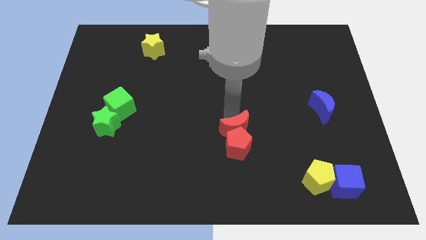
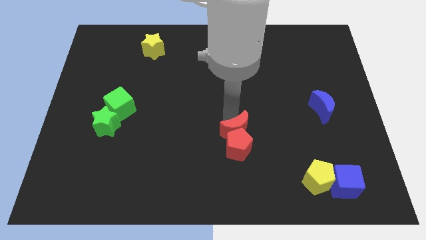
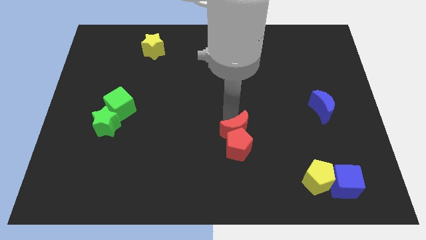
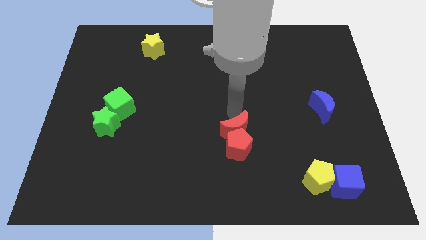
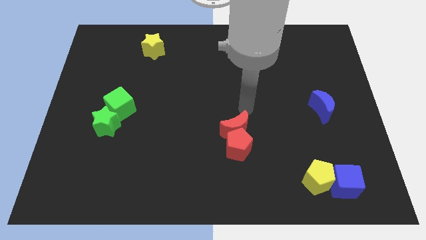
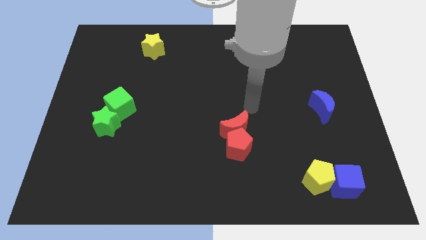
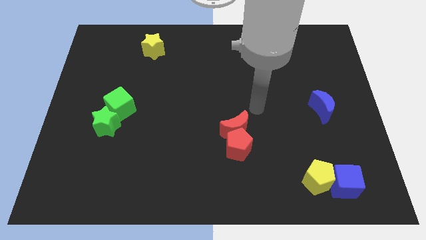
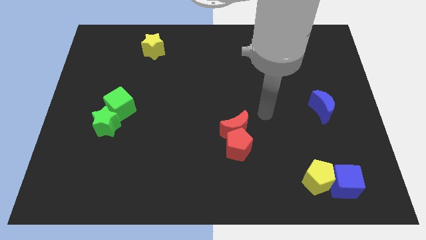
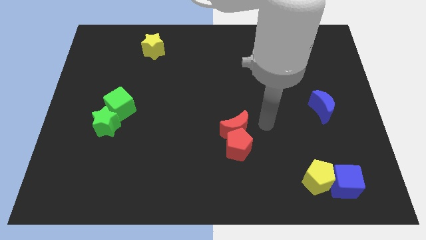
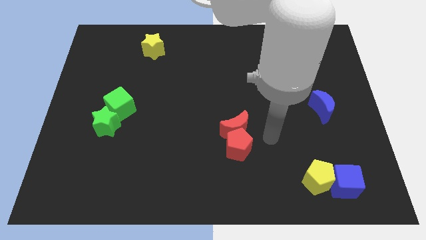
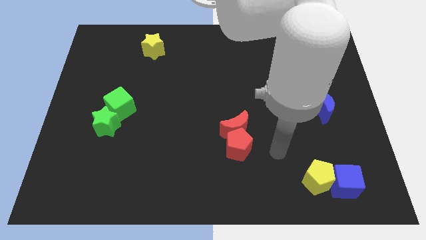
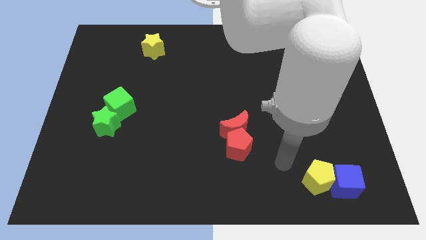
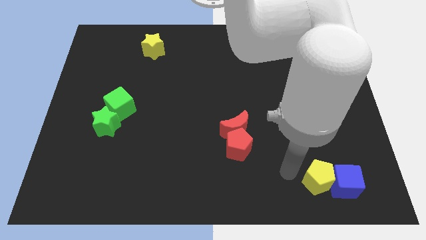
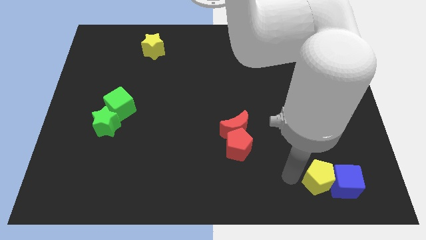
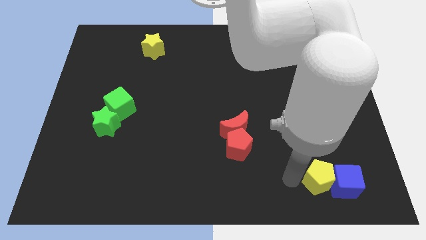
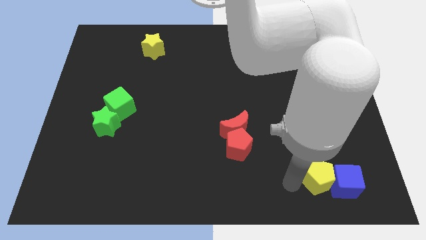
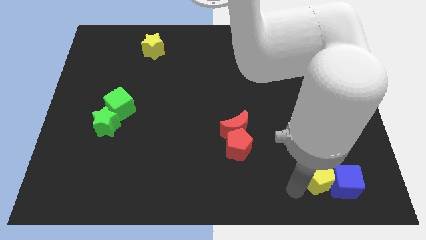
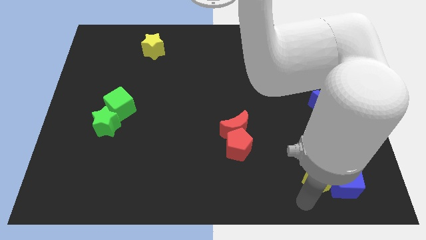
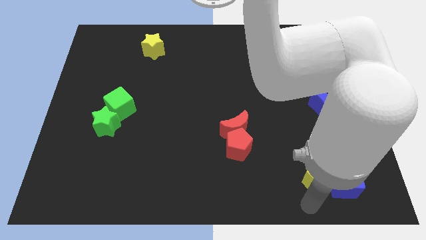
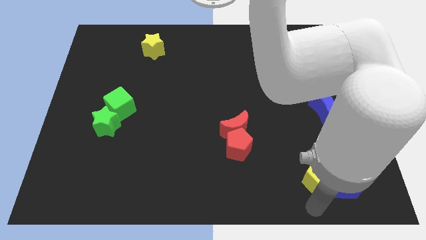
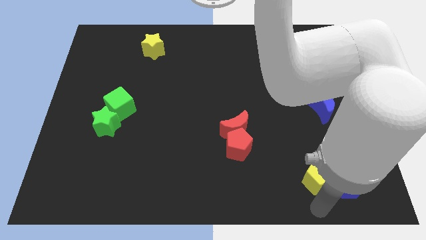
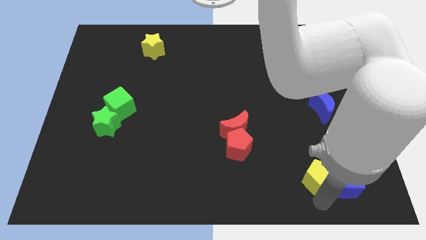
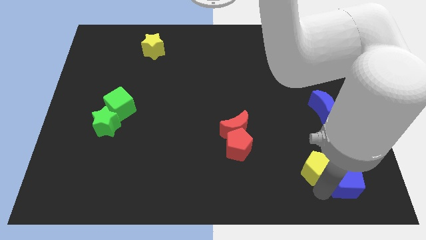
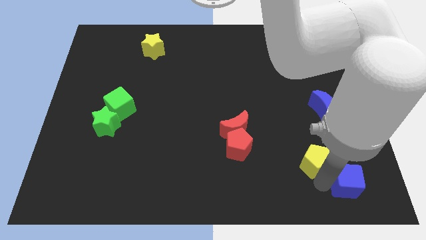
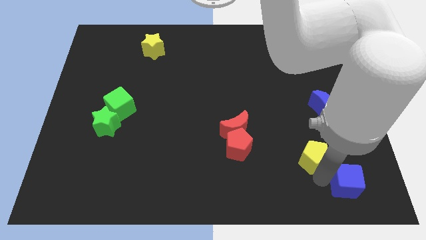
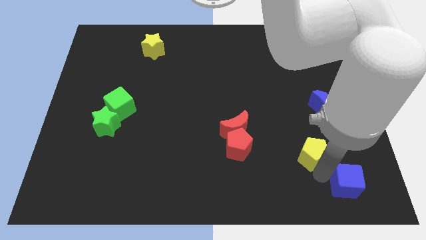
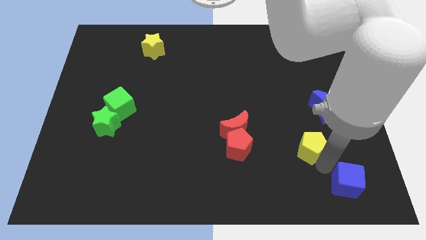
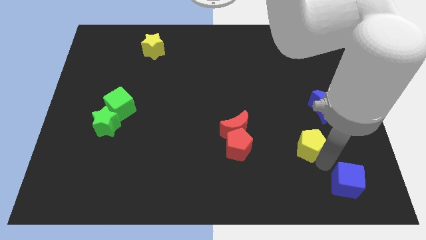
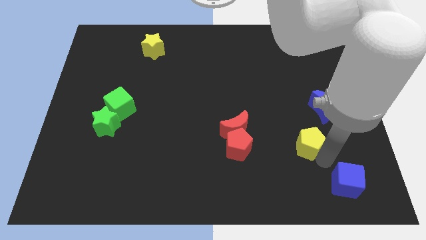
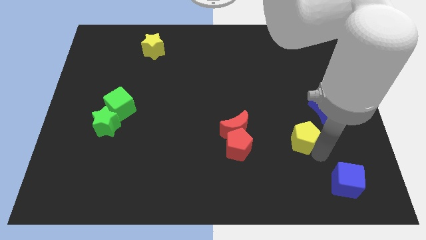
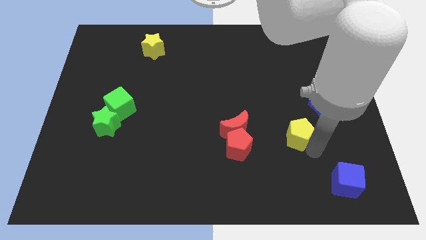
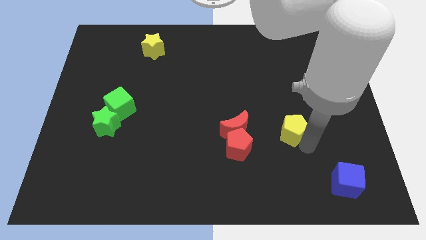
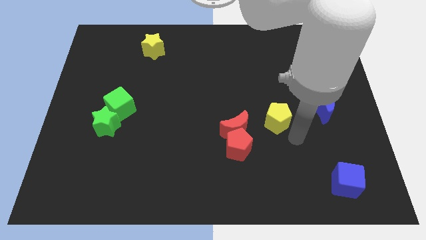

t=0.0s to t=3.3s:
arrange the yellow pentagon in between the red pentagon and the blue crescent

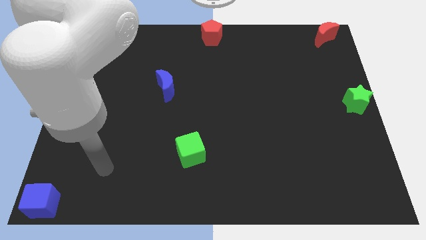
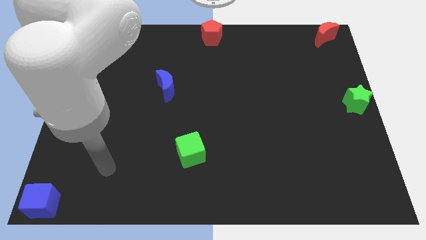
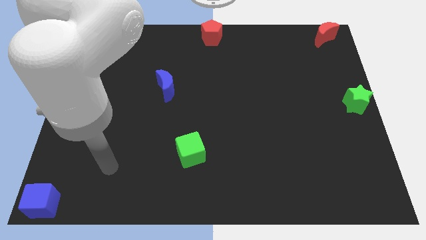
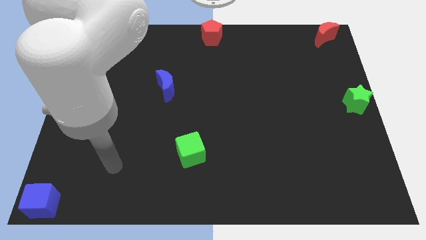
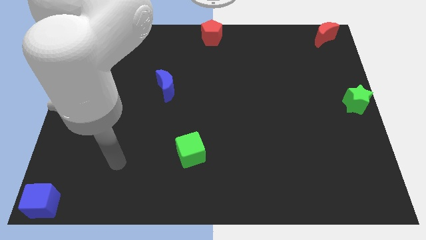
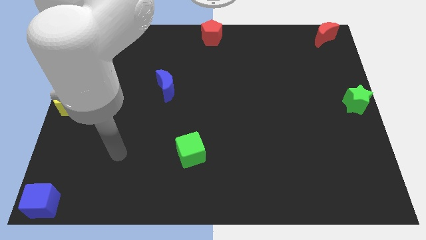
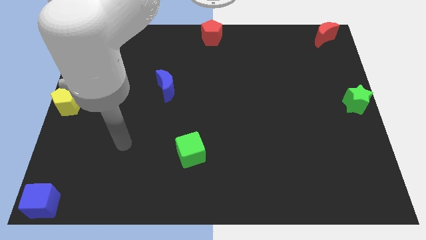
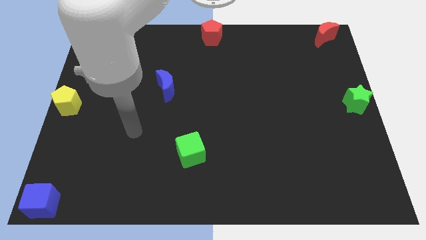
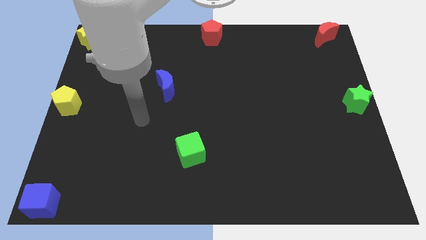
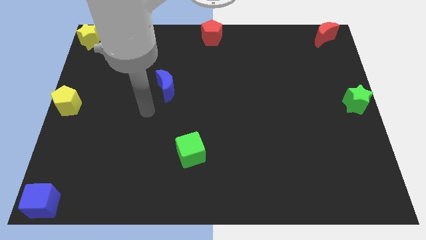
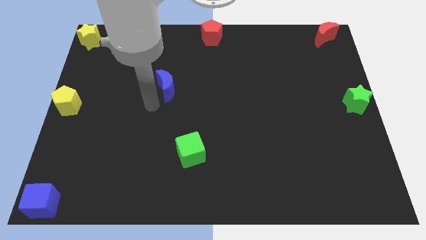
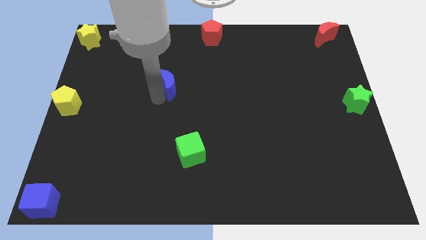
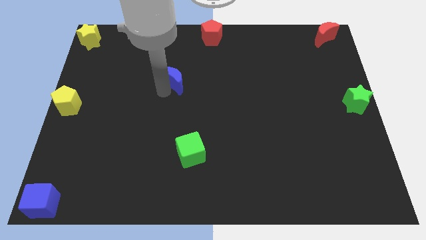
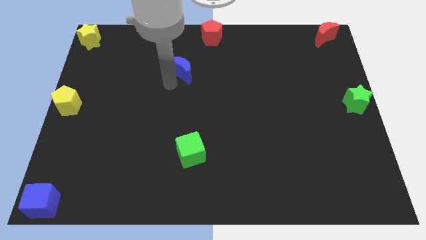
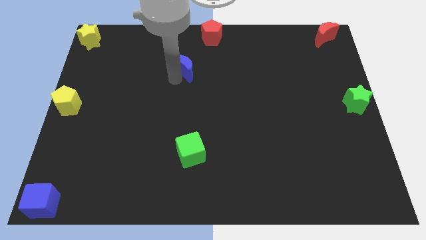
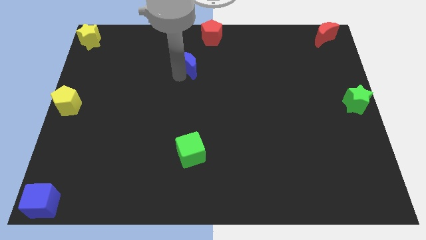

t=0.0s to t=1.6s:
move the arm to the blue crescent

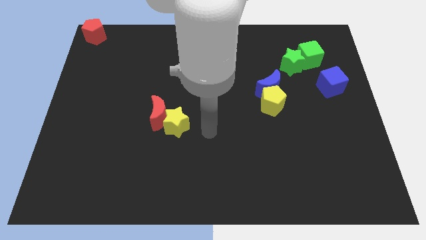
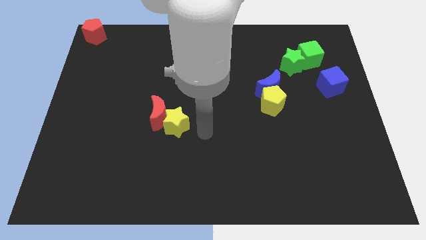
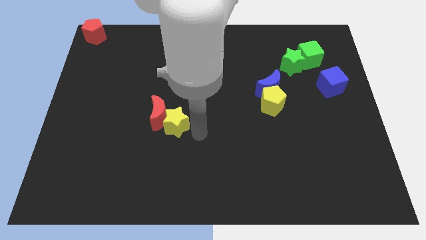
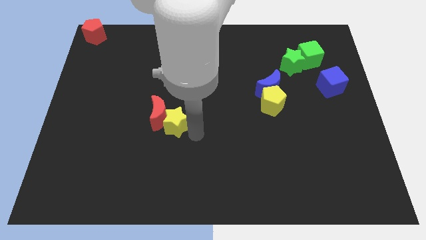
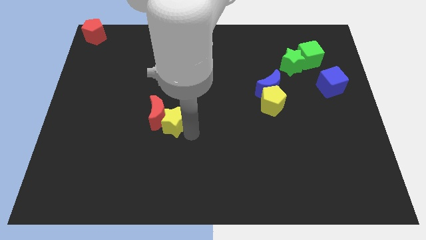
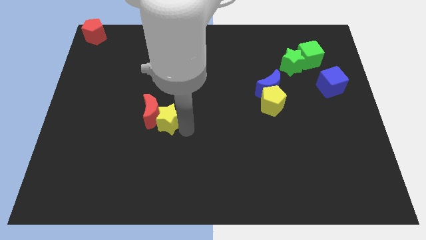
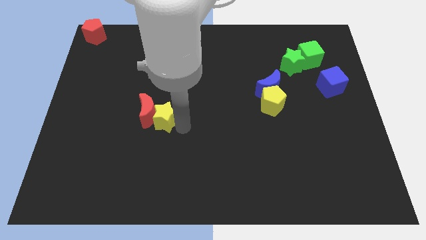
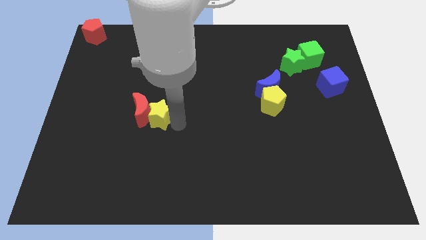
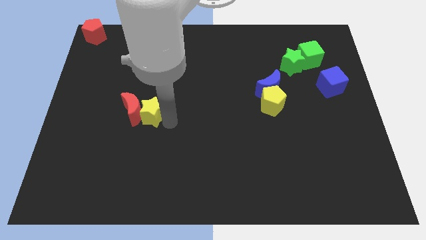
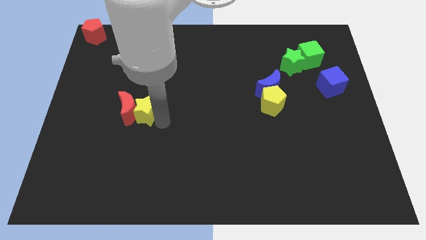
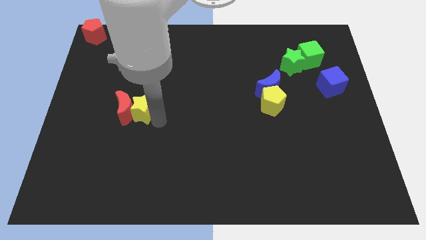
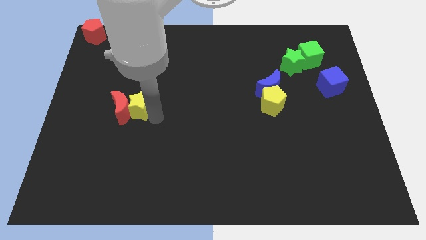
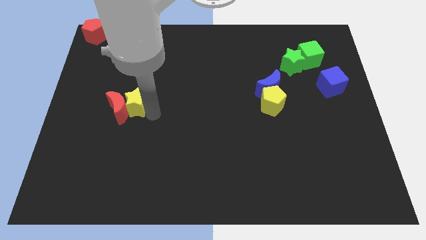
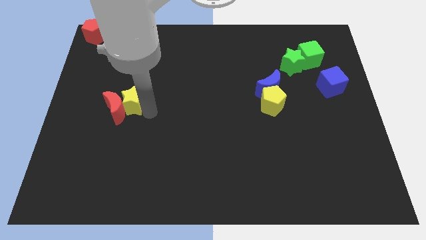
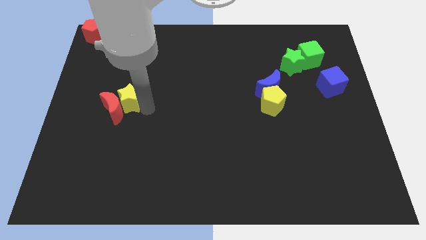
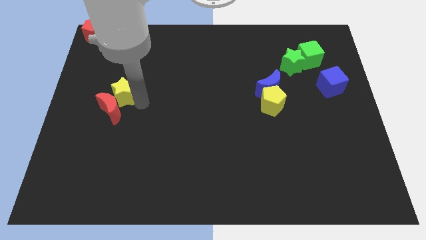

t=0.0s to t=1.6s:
push the yellow star into the red moon

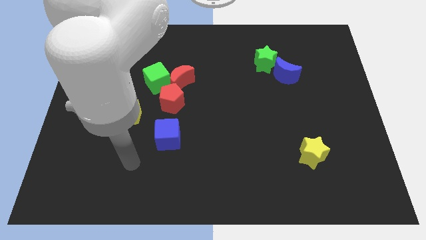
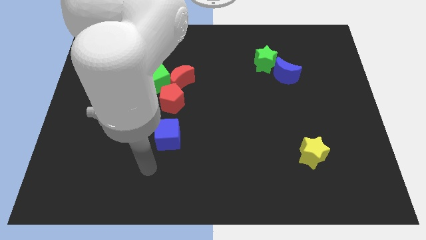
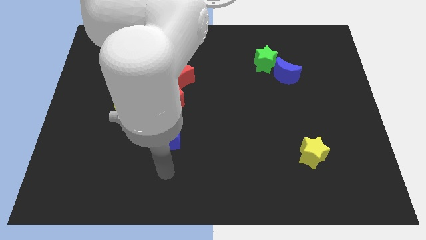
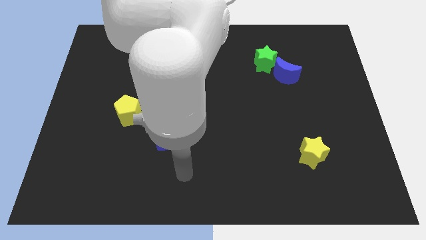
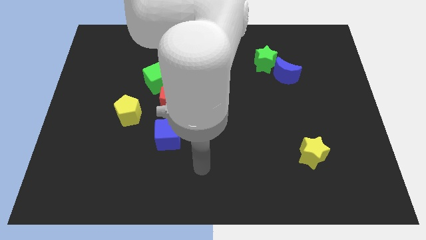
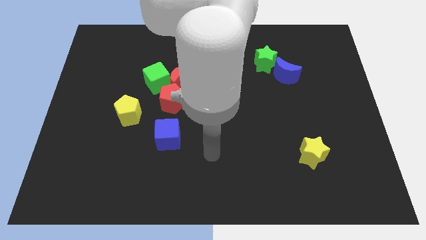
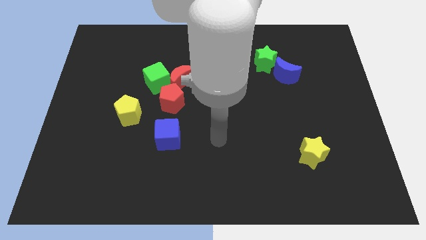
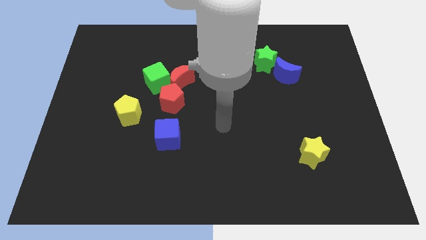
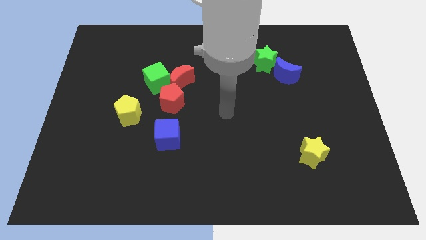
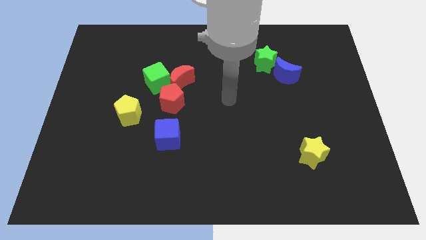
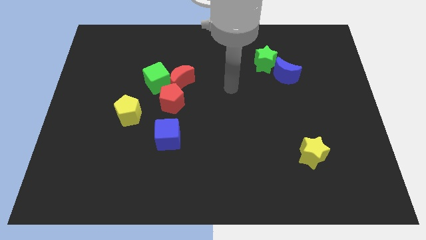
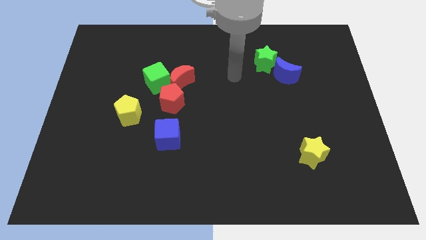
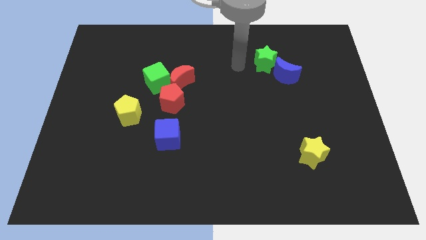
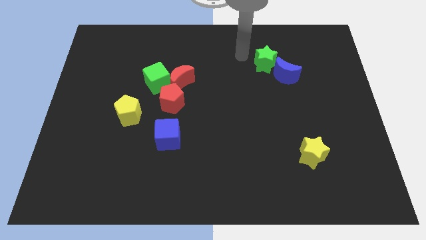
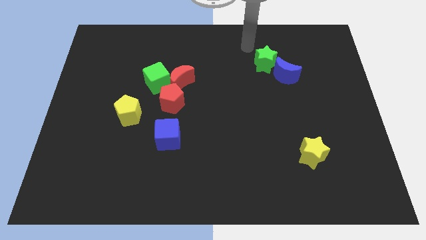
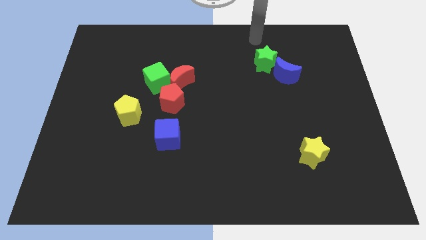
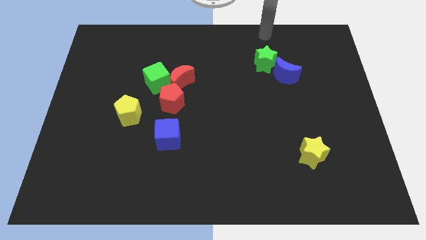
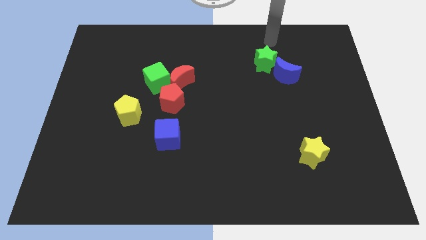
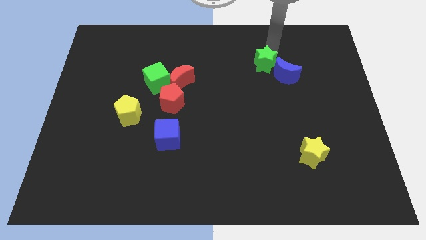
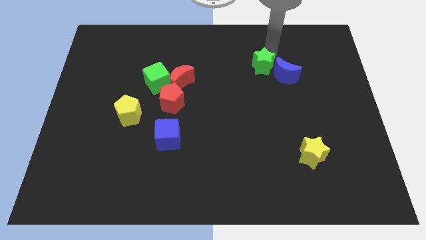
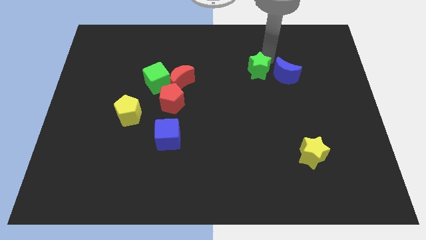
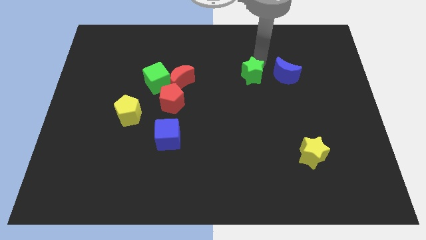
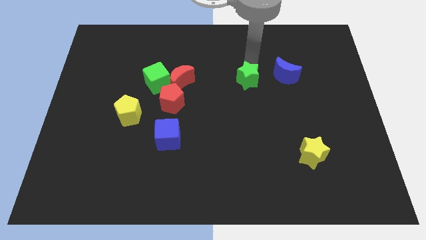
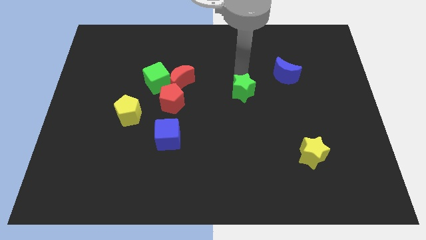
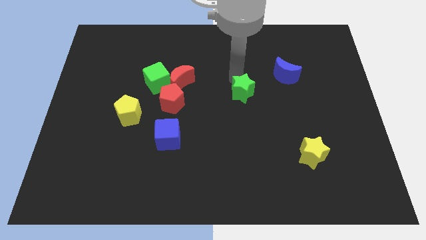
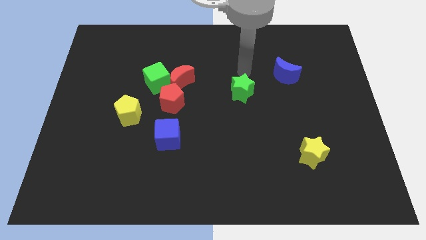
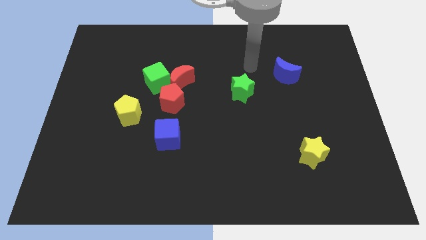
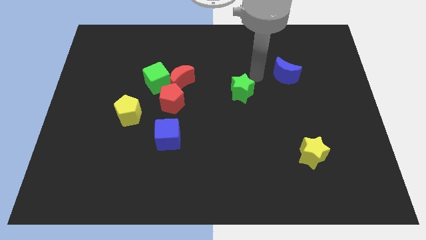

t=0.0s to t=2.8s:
place the green star diagonally bottom left to the blue moon
